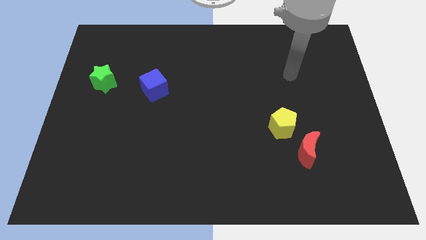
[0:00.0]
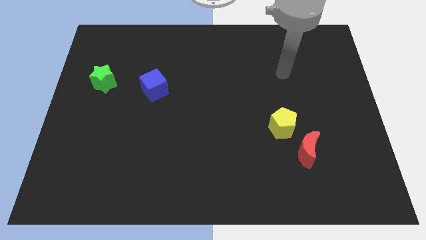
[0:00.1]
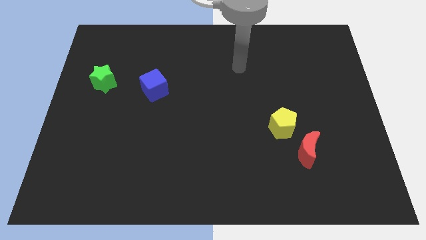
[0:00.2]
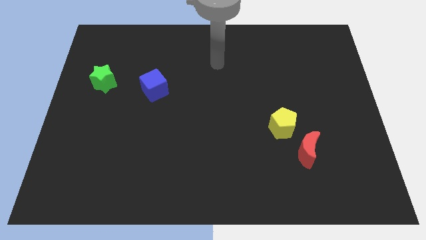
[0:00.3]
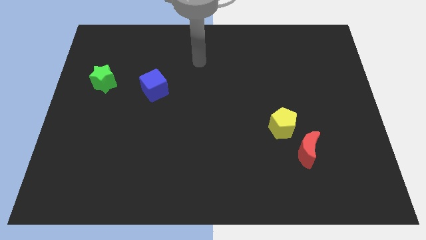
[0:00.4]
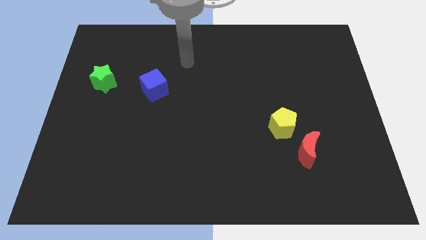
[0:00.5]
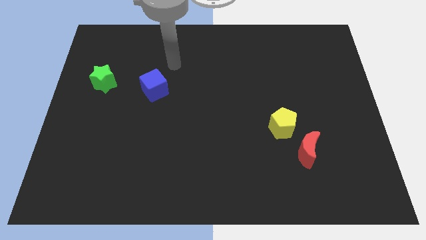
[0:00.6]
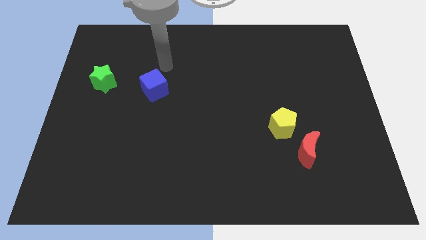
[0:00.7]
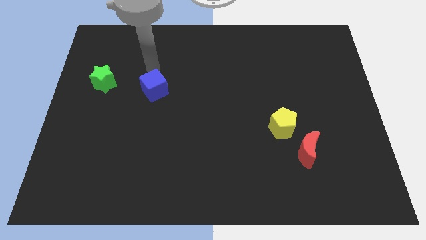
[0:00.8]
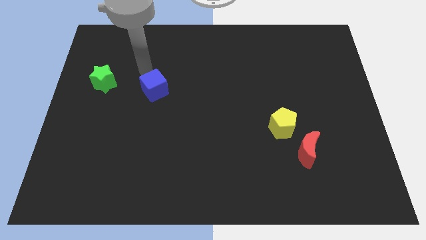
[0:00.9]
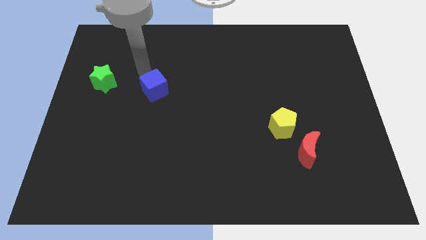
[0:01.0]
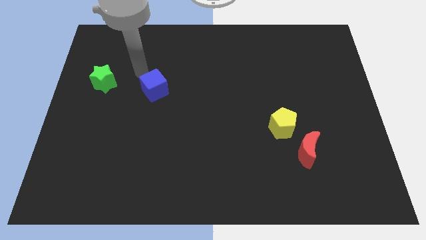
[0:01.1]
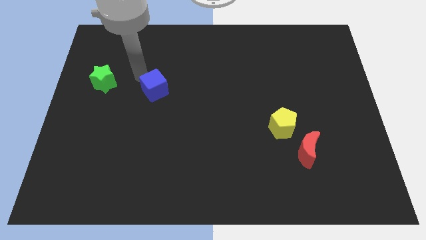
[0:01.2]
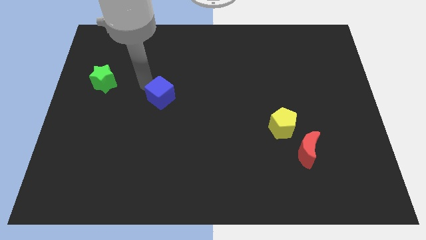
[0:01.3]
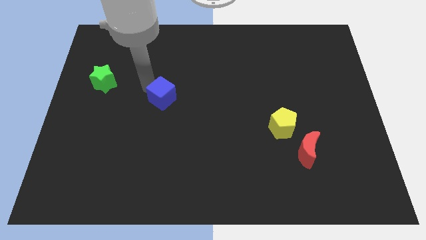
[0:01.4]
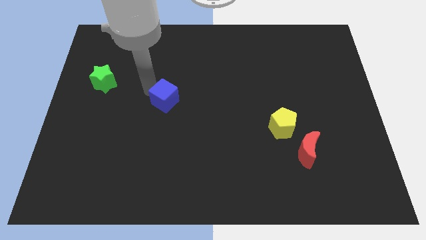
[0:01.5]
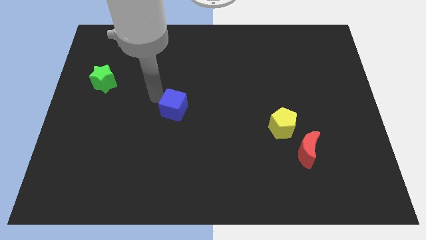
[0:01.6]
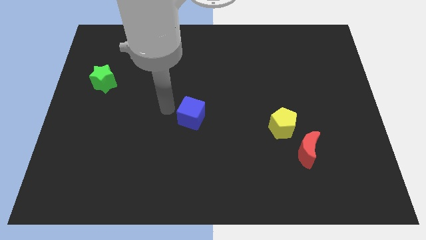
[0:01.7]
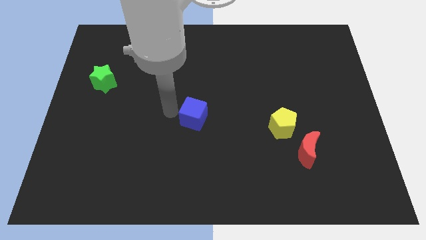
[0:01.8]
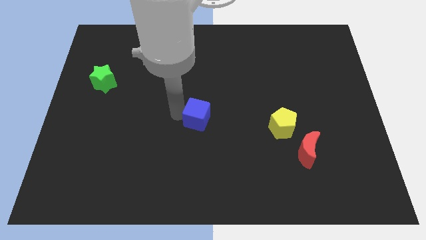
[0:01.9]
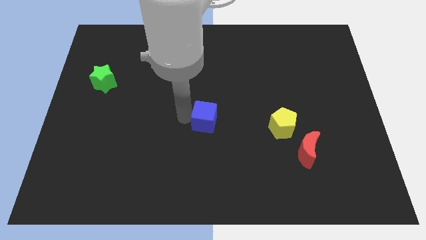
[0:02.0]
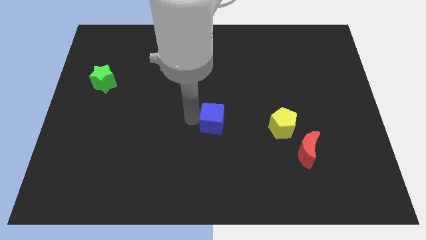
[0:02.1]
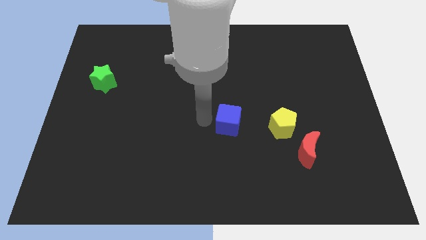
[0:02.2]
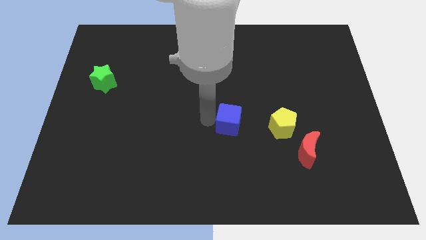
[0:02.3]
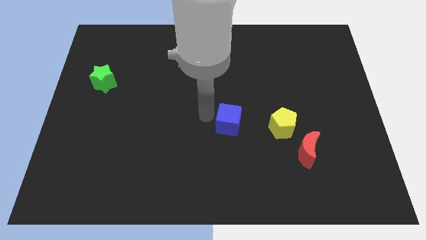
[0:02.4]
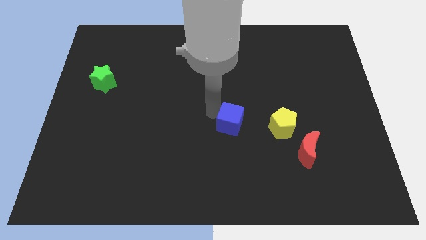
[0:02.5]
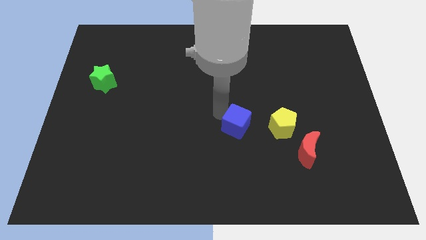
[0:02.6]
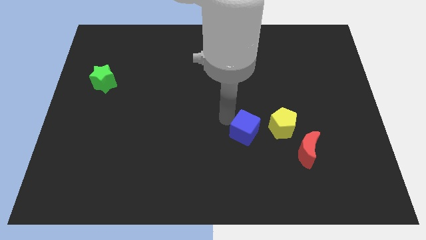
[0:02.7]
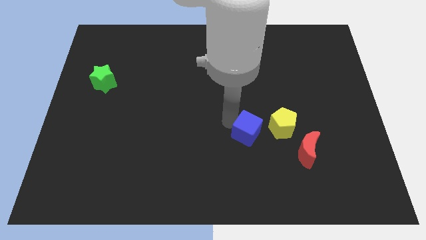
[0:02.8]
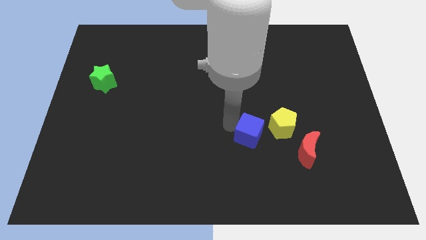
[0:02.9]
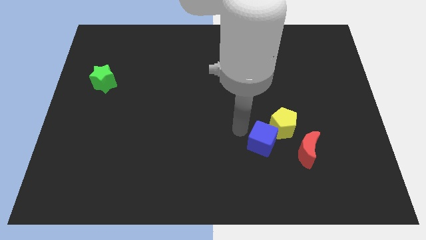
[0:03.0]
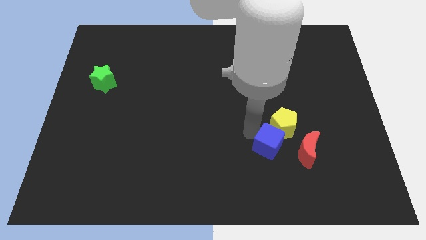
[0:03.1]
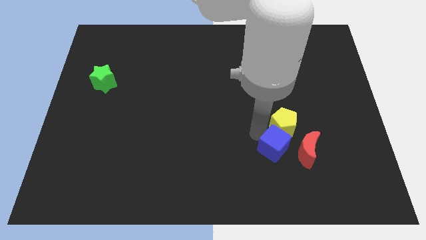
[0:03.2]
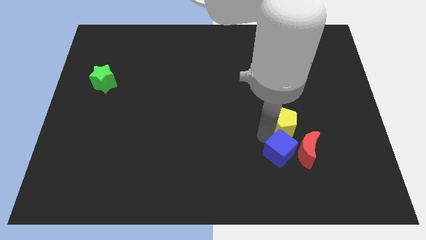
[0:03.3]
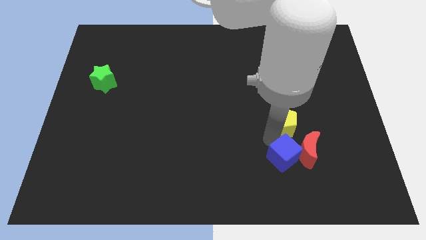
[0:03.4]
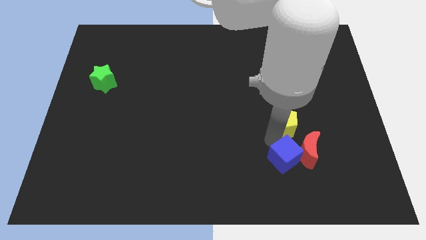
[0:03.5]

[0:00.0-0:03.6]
put the blue cube towards the moon

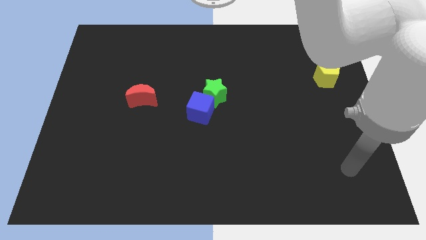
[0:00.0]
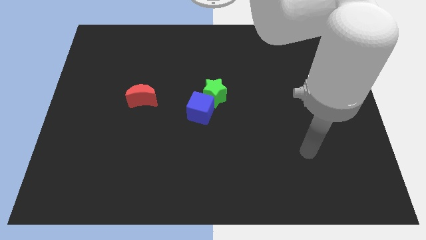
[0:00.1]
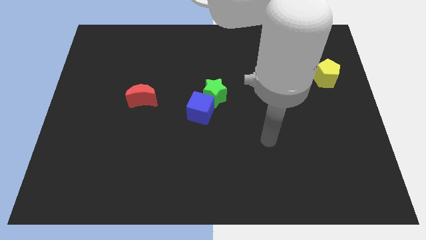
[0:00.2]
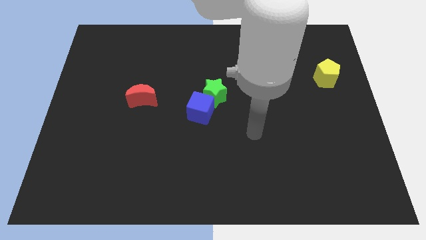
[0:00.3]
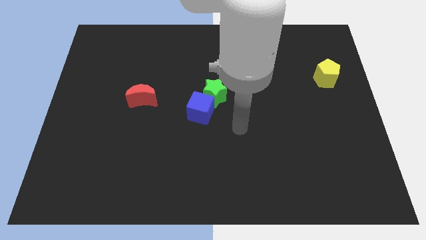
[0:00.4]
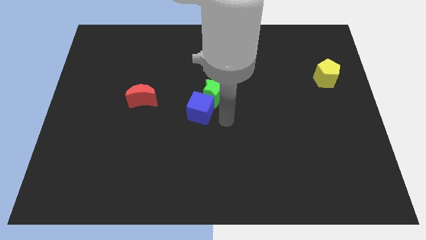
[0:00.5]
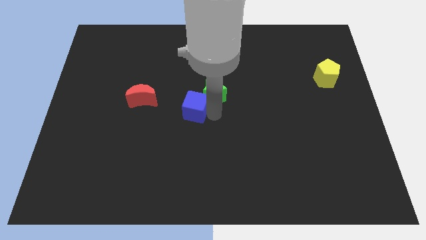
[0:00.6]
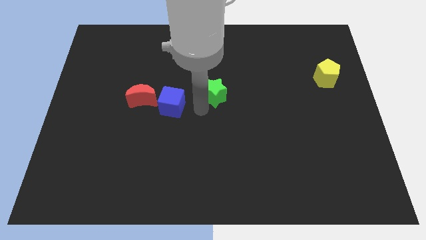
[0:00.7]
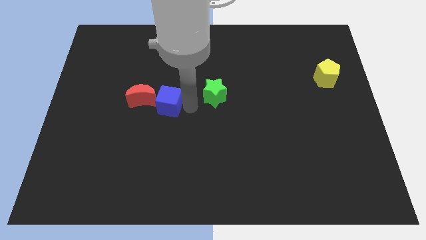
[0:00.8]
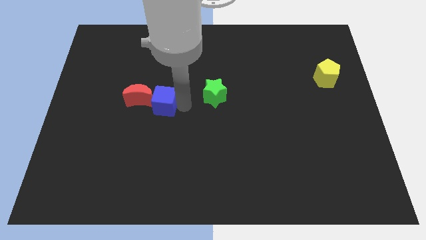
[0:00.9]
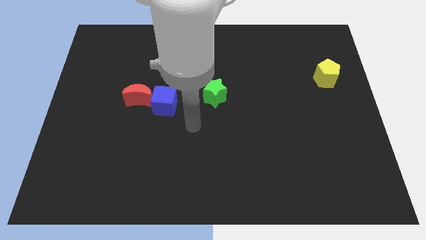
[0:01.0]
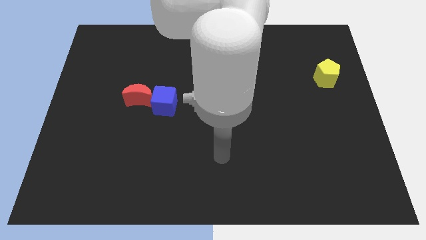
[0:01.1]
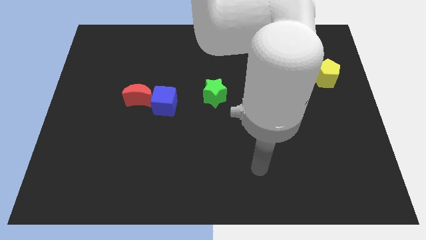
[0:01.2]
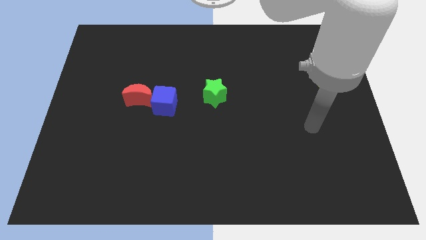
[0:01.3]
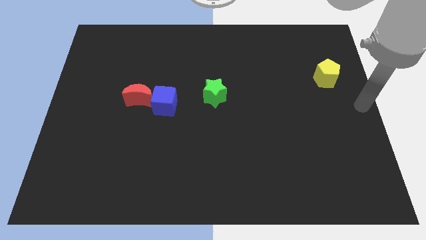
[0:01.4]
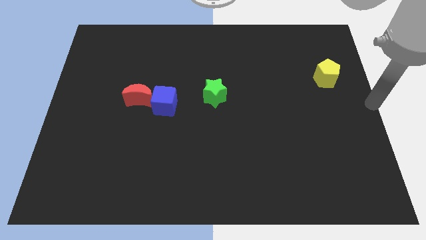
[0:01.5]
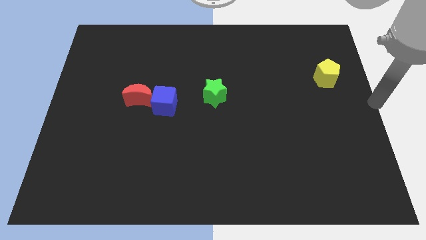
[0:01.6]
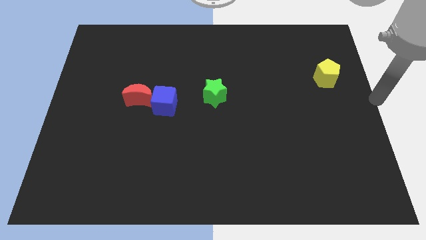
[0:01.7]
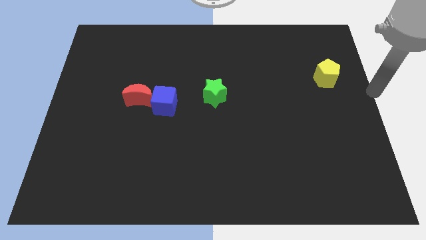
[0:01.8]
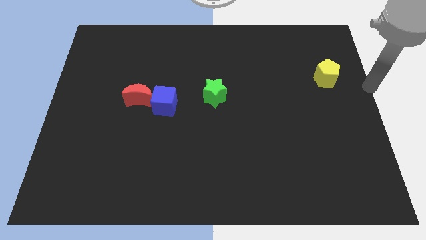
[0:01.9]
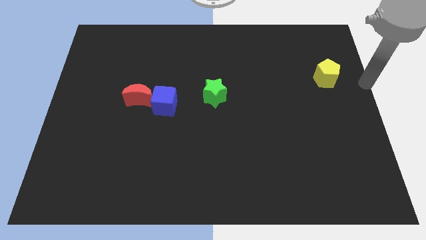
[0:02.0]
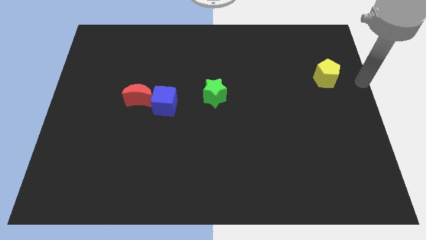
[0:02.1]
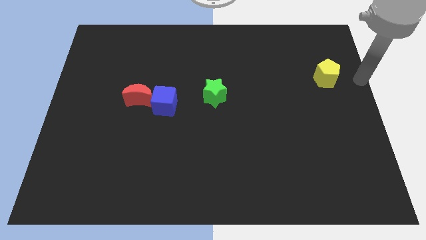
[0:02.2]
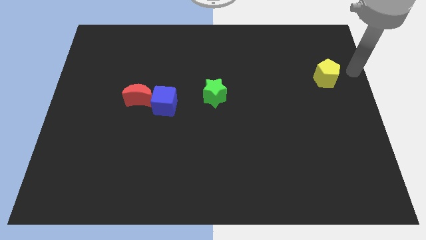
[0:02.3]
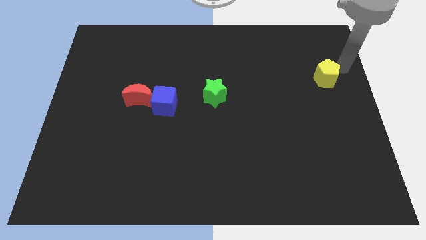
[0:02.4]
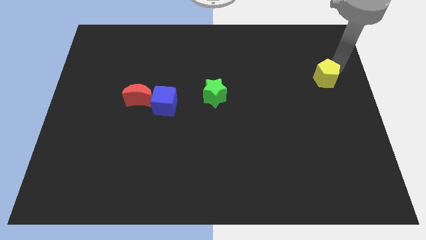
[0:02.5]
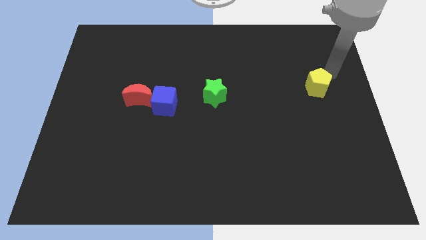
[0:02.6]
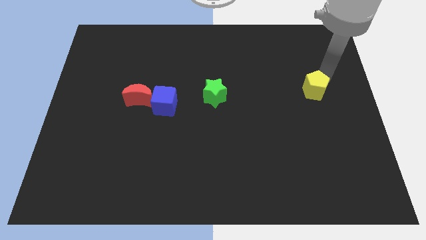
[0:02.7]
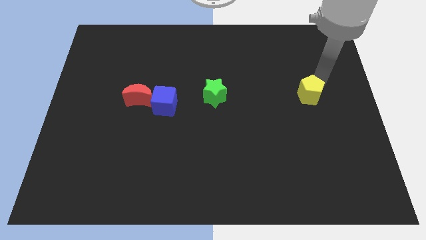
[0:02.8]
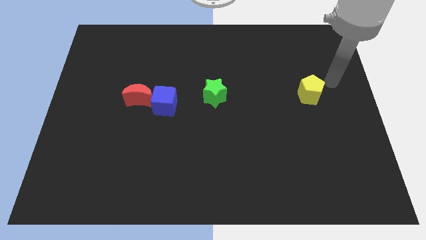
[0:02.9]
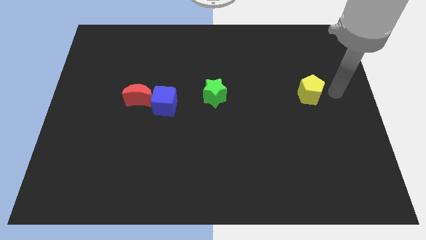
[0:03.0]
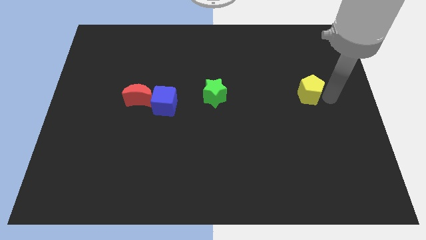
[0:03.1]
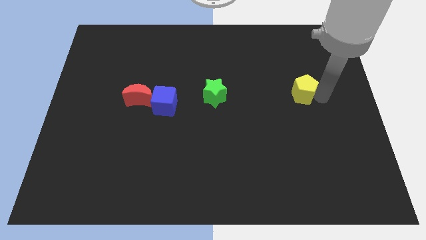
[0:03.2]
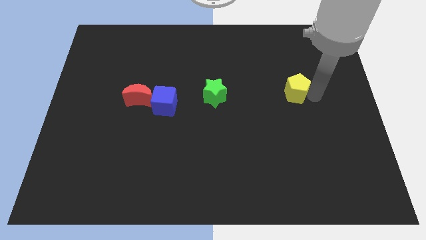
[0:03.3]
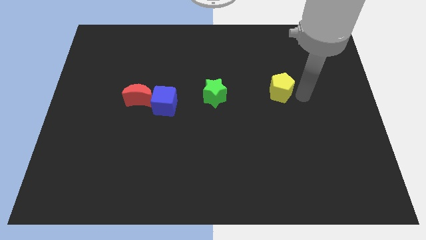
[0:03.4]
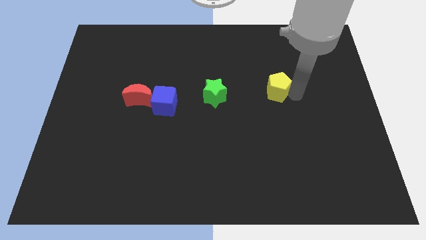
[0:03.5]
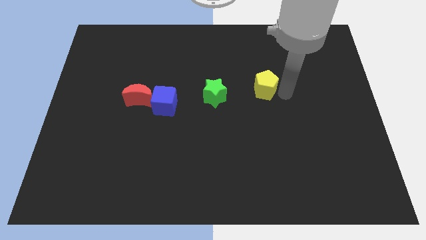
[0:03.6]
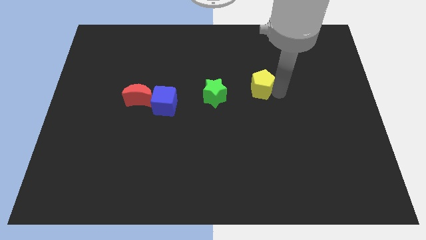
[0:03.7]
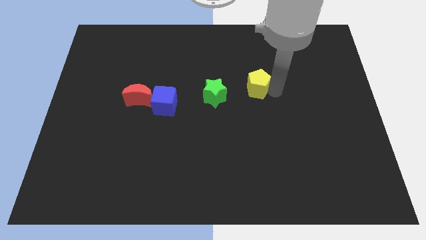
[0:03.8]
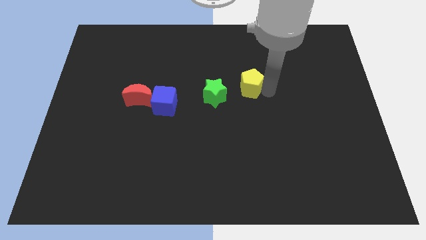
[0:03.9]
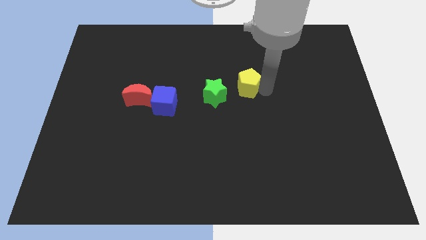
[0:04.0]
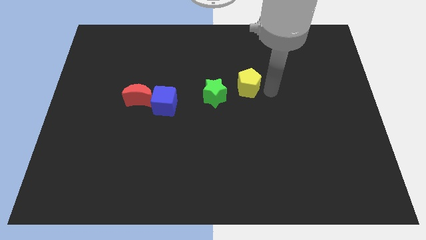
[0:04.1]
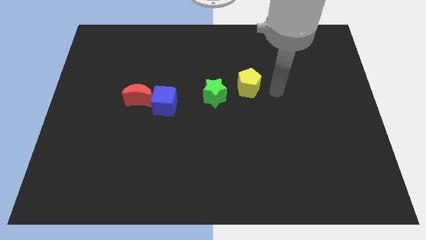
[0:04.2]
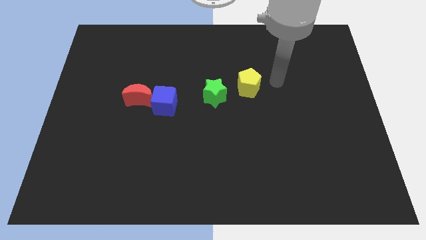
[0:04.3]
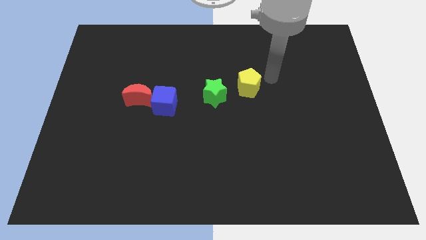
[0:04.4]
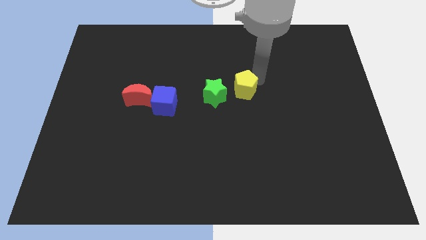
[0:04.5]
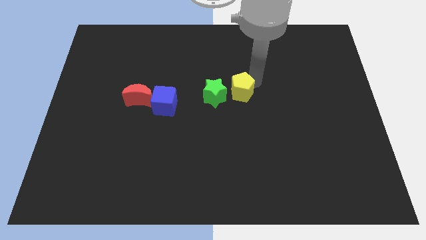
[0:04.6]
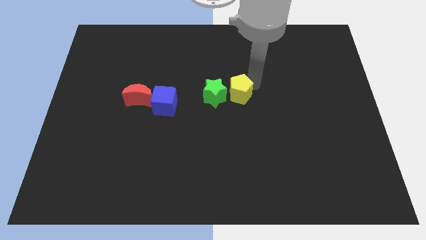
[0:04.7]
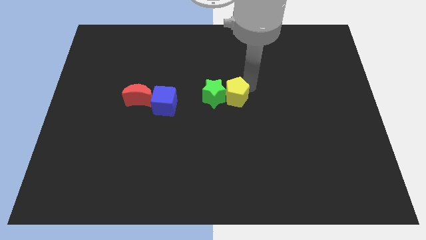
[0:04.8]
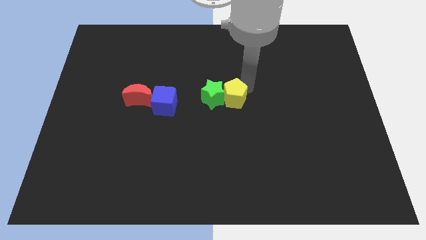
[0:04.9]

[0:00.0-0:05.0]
push the pentagon towards the green block
